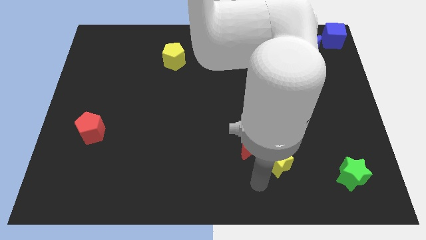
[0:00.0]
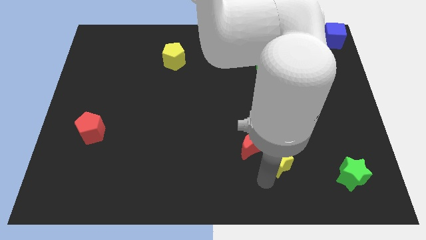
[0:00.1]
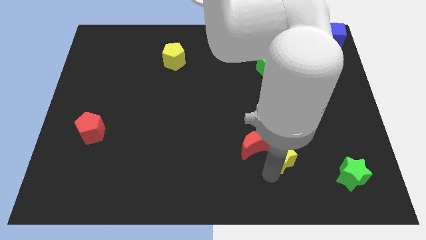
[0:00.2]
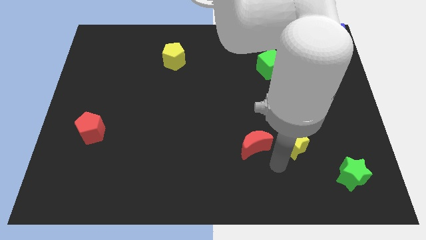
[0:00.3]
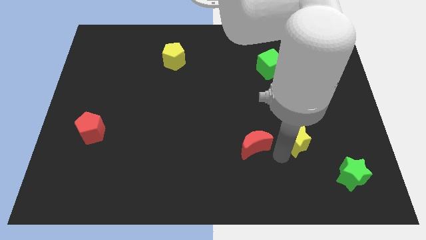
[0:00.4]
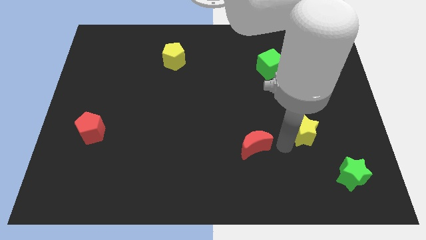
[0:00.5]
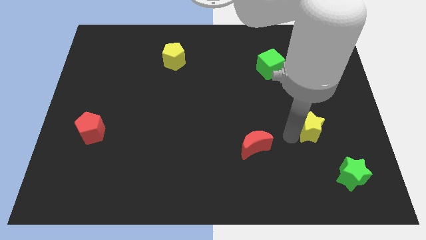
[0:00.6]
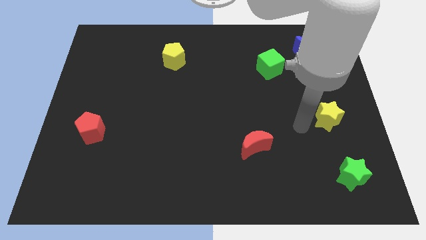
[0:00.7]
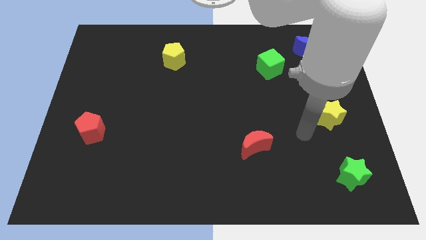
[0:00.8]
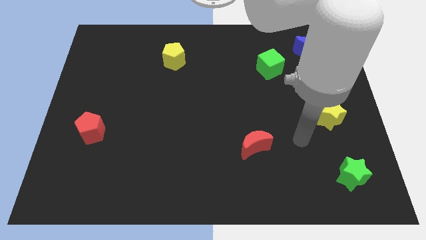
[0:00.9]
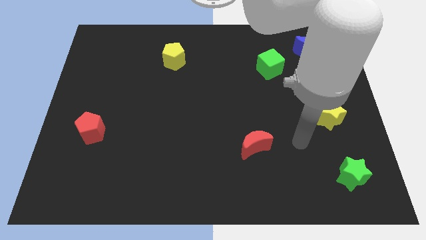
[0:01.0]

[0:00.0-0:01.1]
move the yellow star vertically to the top of the green star

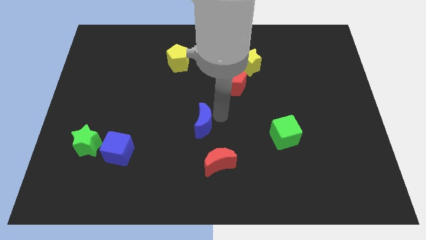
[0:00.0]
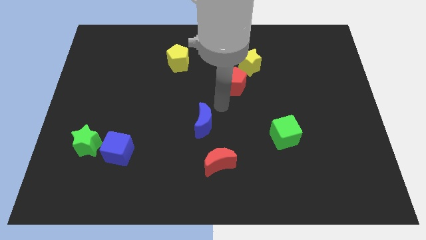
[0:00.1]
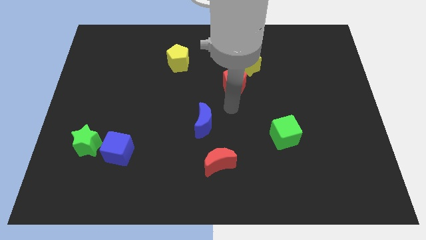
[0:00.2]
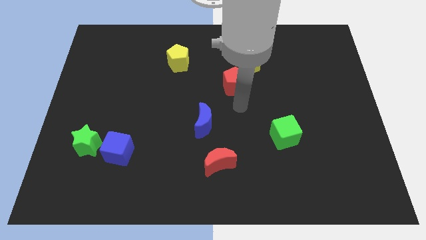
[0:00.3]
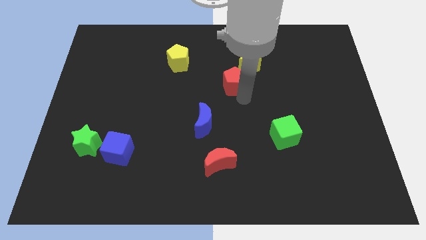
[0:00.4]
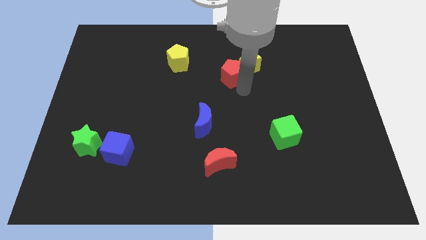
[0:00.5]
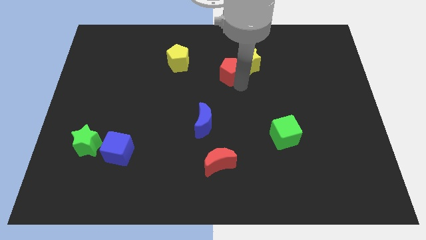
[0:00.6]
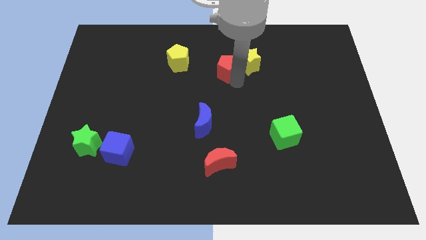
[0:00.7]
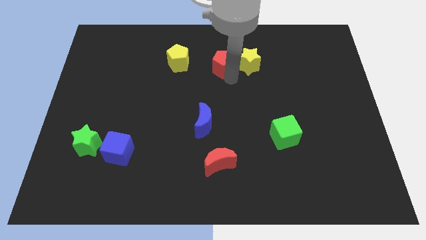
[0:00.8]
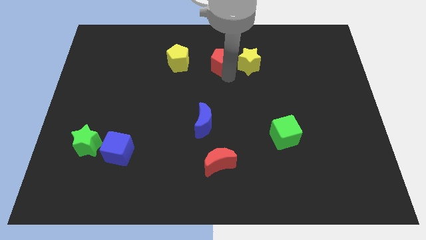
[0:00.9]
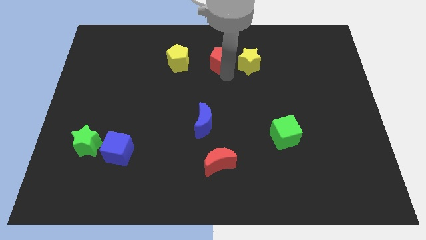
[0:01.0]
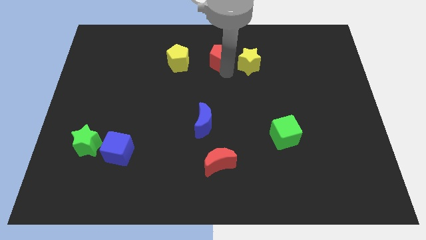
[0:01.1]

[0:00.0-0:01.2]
place the red pentagon in between the yellow blocks

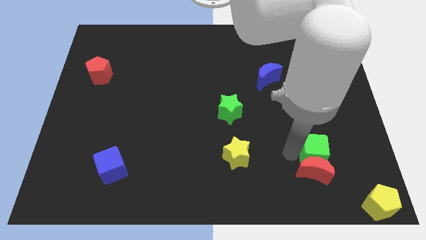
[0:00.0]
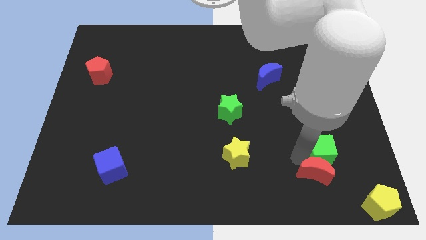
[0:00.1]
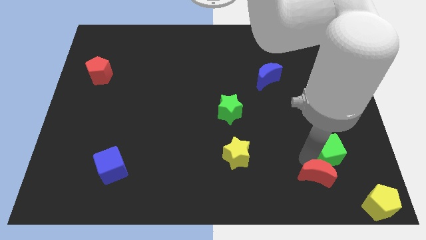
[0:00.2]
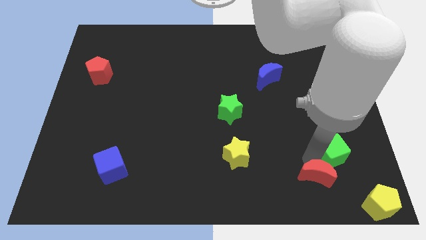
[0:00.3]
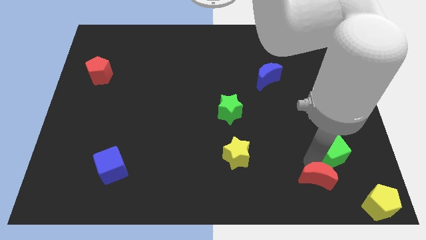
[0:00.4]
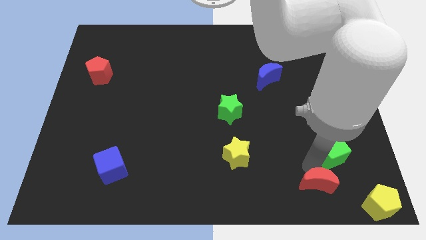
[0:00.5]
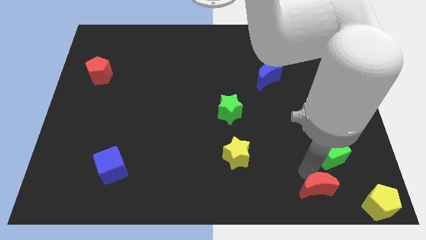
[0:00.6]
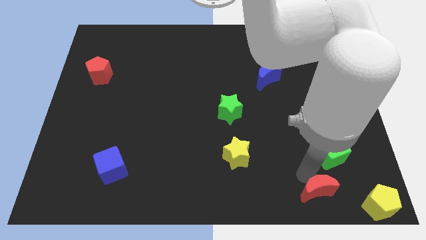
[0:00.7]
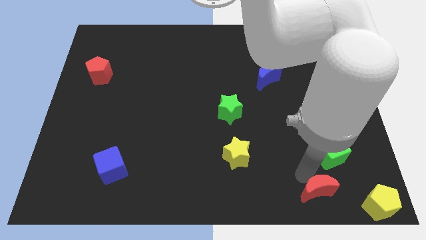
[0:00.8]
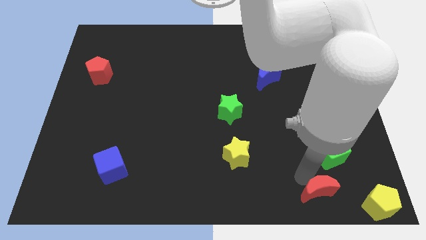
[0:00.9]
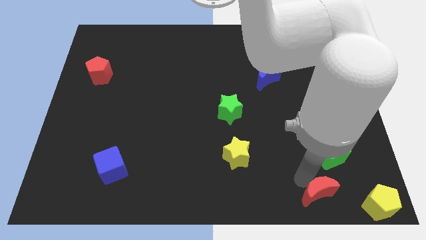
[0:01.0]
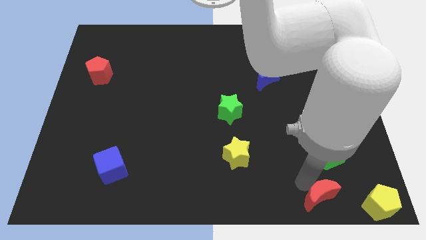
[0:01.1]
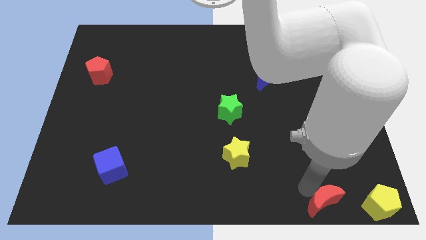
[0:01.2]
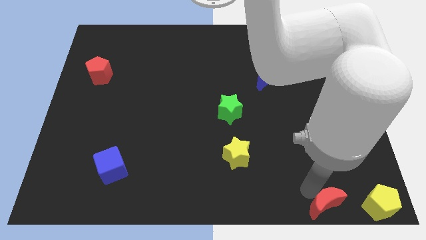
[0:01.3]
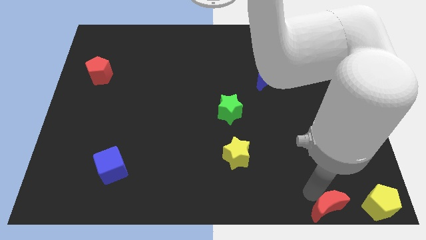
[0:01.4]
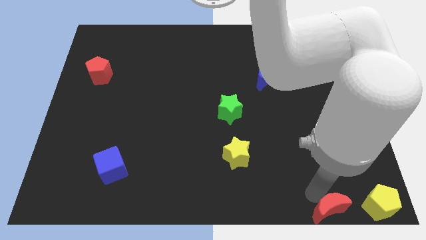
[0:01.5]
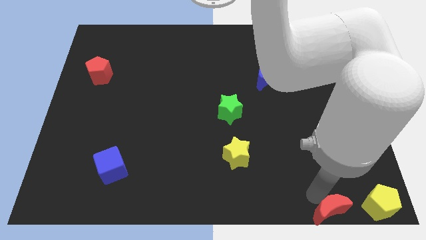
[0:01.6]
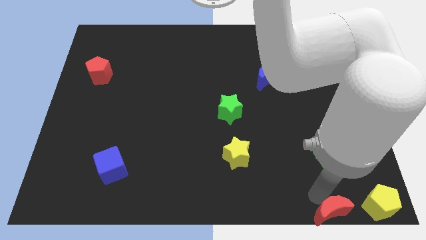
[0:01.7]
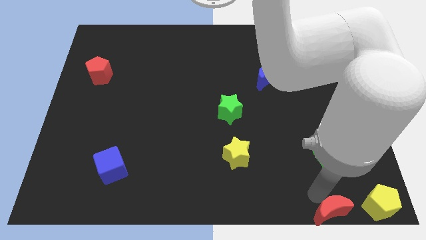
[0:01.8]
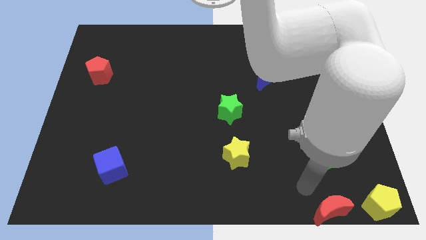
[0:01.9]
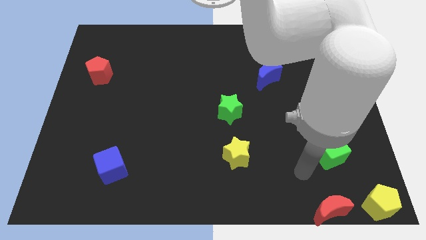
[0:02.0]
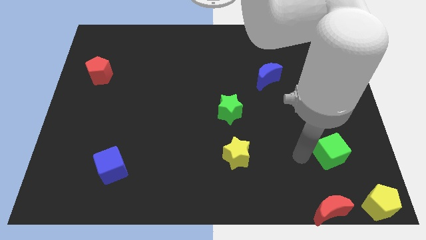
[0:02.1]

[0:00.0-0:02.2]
push the red crescent to the left side of the yellow pentagon

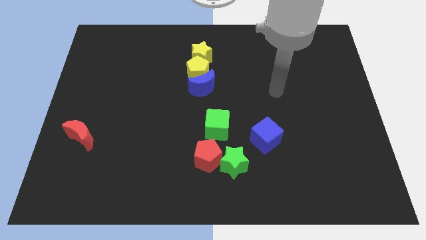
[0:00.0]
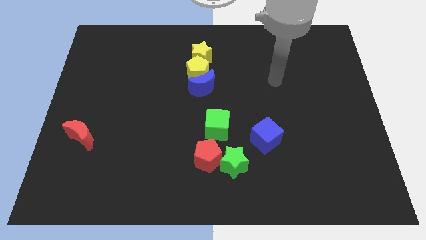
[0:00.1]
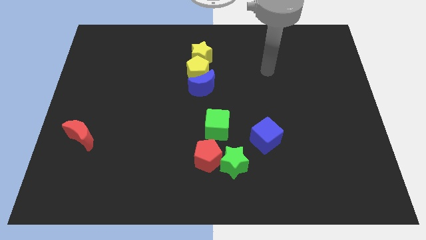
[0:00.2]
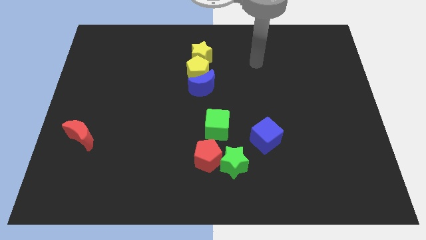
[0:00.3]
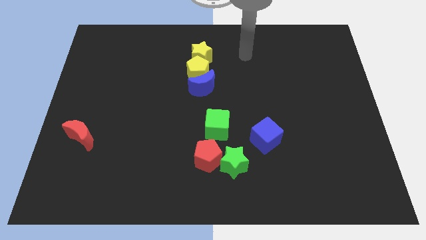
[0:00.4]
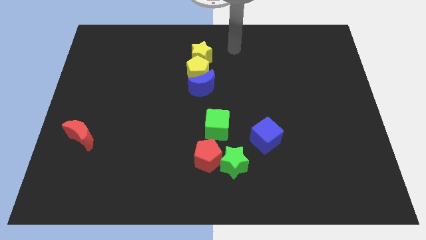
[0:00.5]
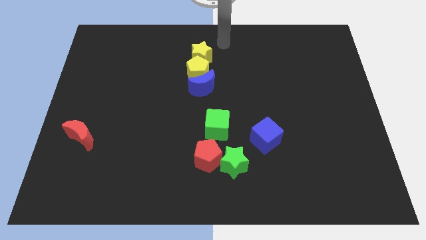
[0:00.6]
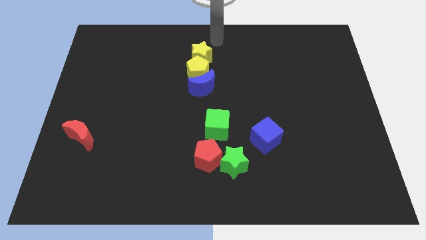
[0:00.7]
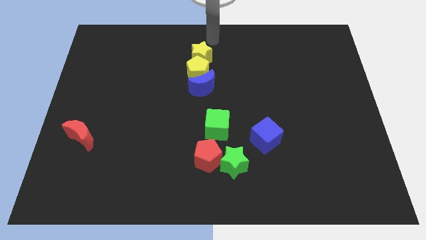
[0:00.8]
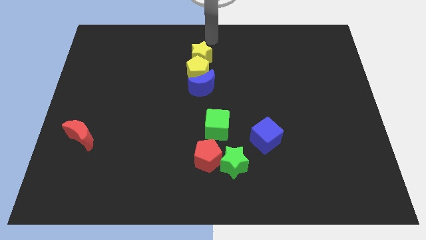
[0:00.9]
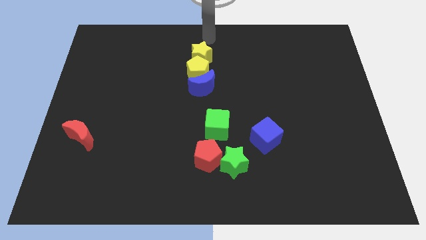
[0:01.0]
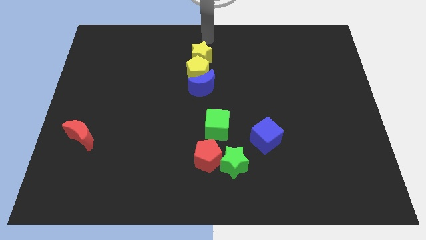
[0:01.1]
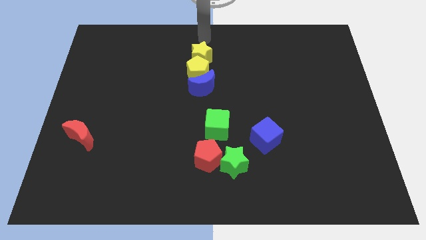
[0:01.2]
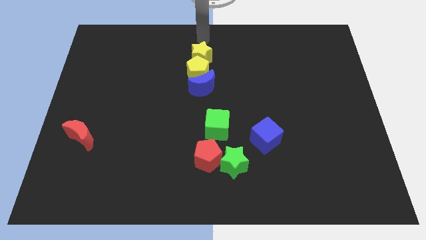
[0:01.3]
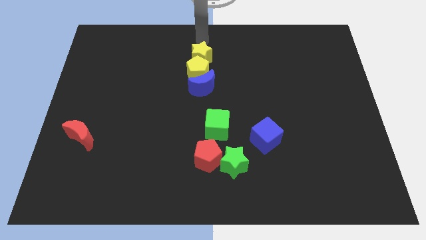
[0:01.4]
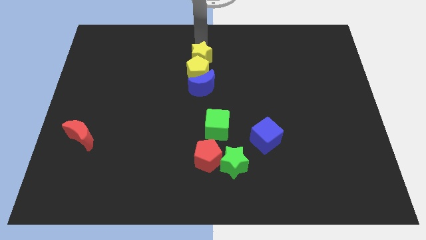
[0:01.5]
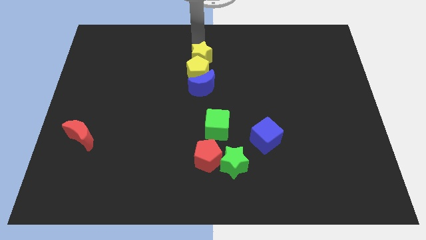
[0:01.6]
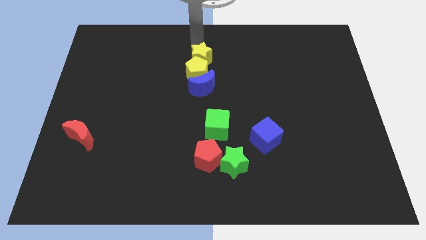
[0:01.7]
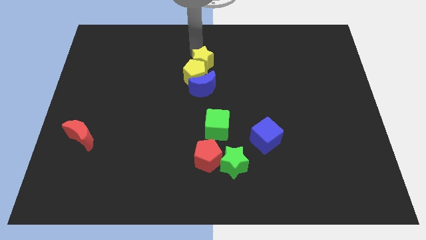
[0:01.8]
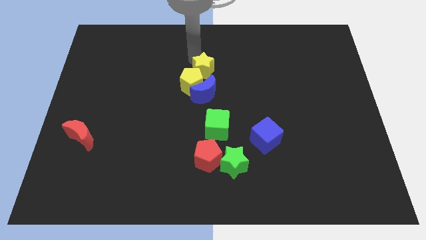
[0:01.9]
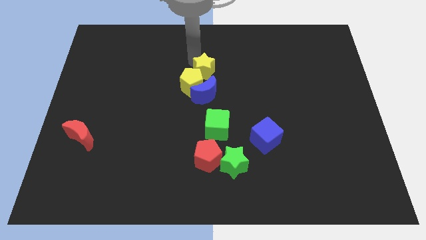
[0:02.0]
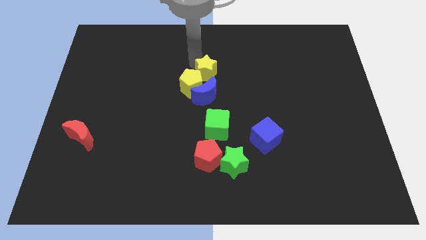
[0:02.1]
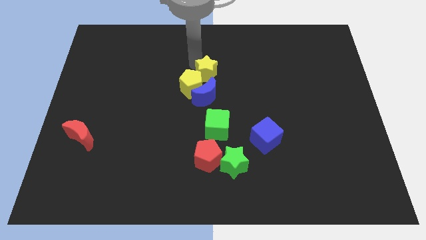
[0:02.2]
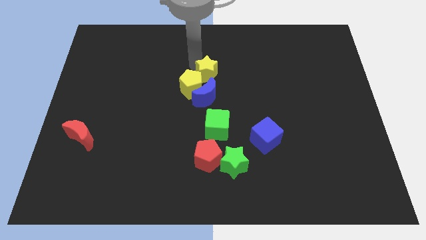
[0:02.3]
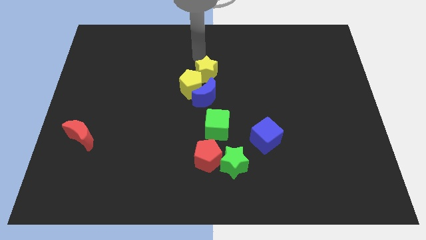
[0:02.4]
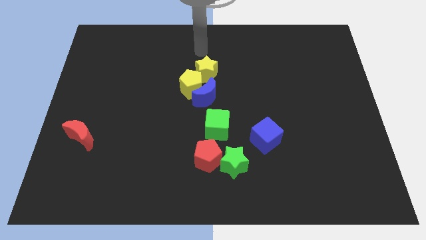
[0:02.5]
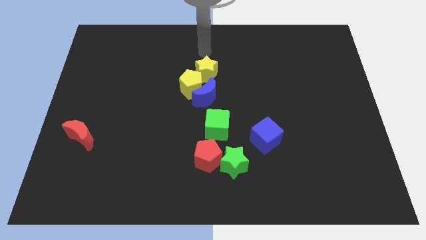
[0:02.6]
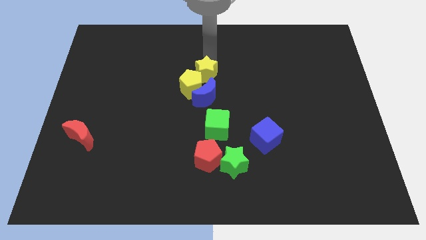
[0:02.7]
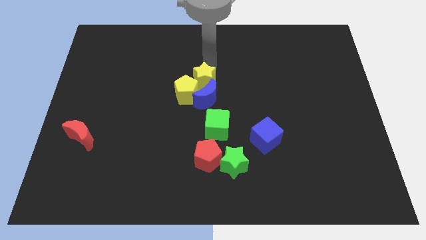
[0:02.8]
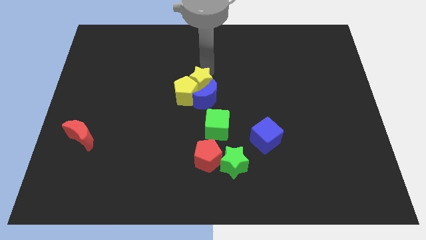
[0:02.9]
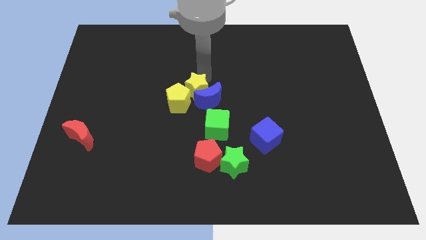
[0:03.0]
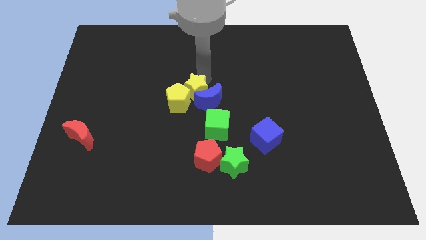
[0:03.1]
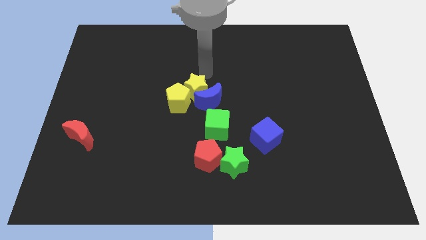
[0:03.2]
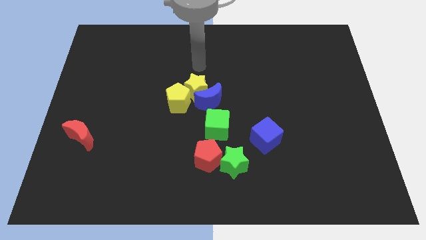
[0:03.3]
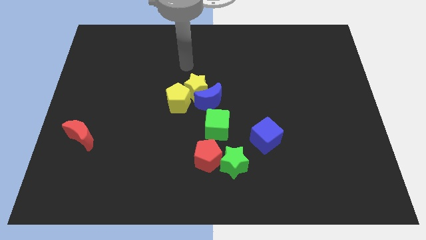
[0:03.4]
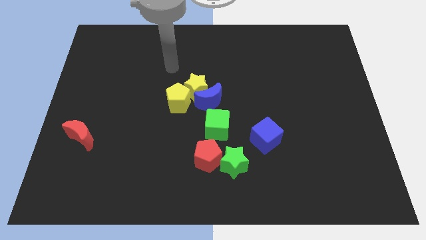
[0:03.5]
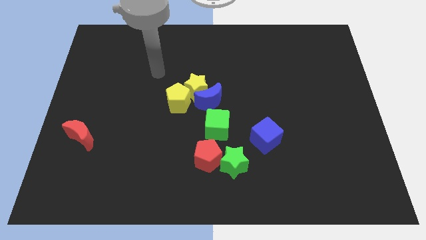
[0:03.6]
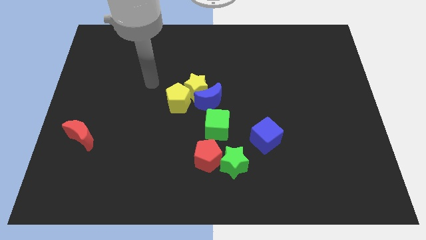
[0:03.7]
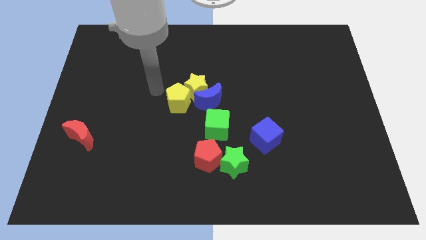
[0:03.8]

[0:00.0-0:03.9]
push the yellow star and yellow pentagon to the center

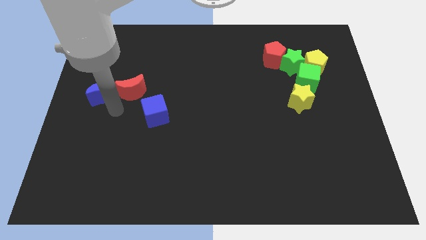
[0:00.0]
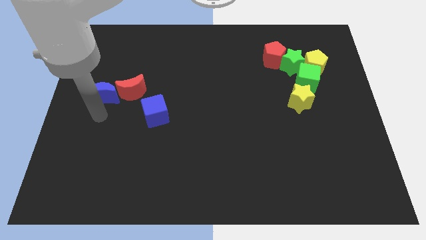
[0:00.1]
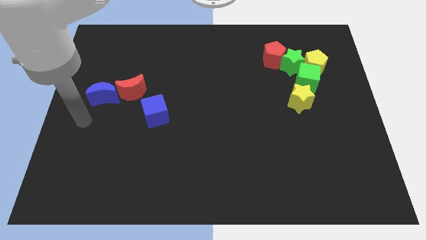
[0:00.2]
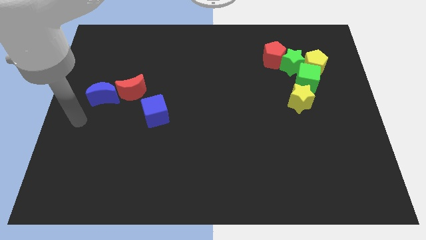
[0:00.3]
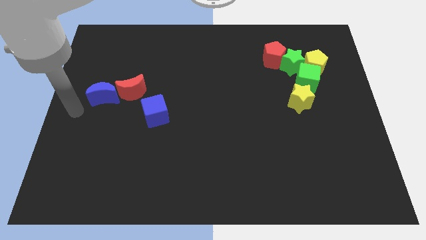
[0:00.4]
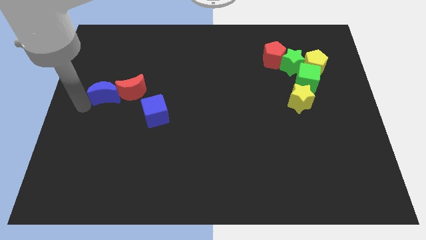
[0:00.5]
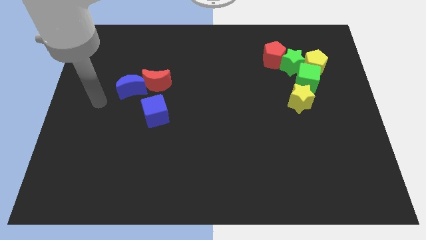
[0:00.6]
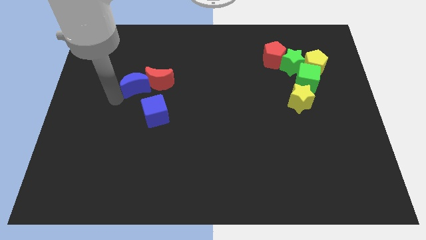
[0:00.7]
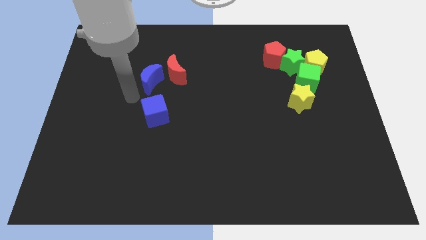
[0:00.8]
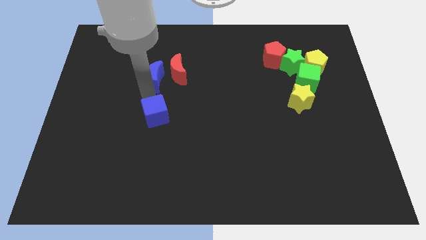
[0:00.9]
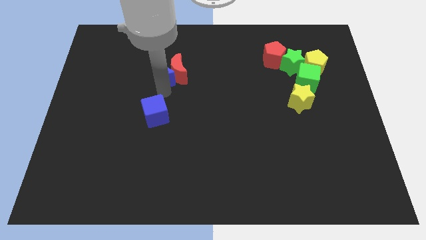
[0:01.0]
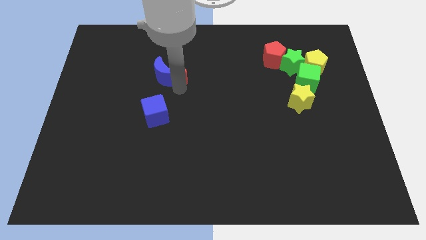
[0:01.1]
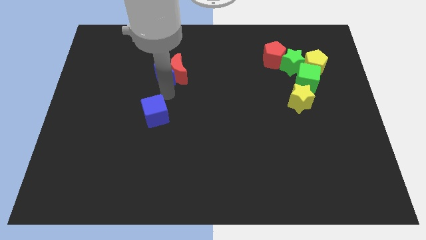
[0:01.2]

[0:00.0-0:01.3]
push the red and blue crescents to the right side of the table
